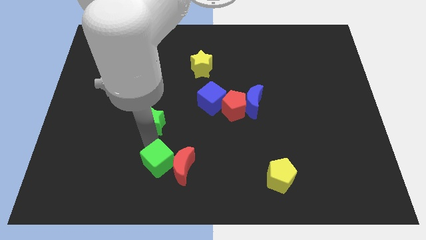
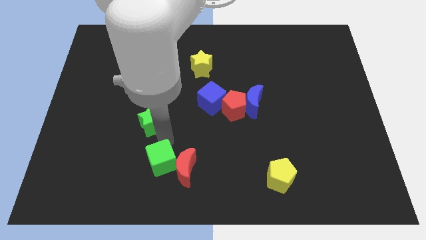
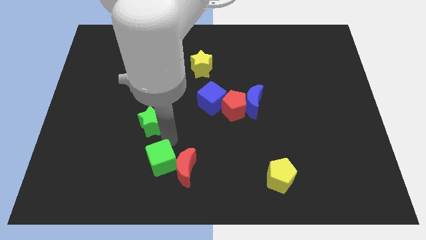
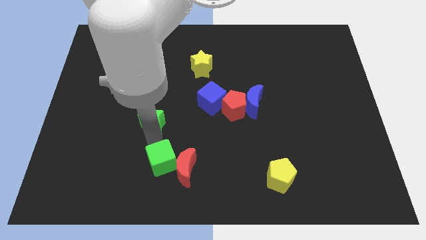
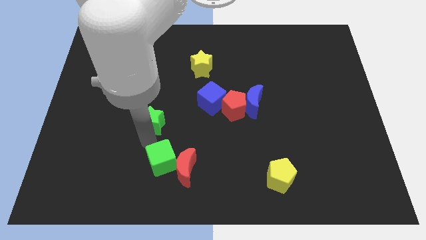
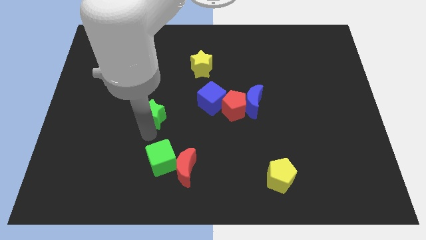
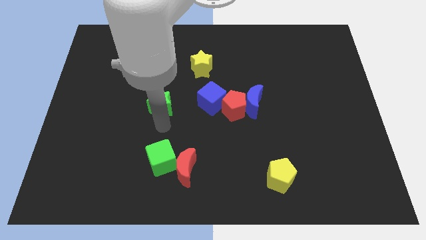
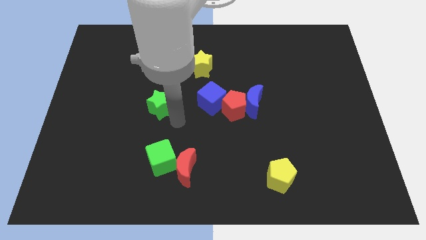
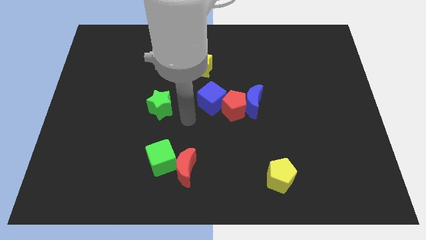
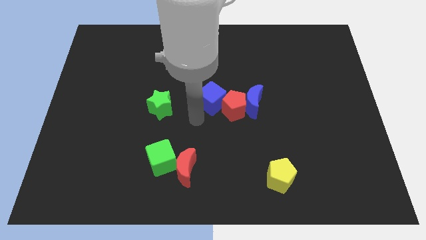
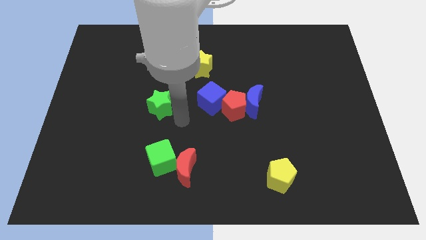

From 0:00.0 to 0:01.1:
move green star up to the left of blue cube

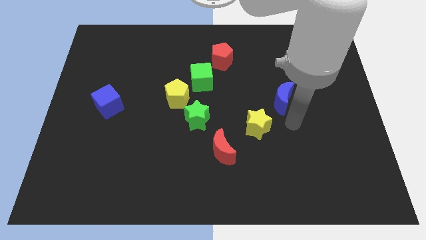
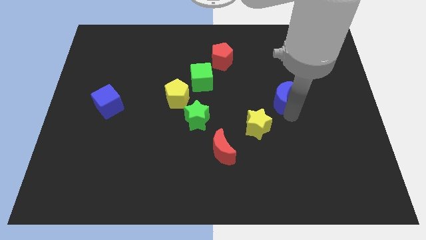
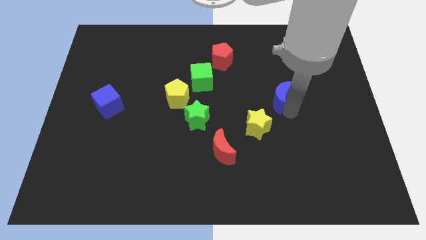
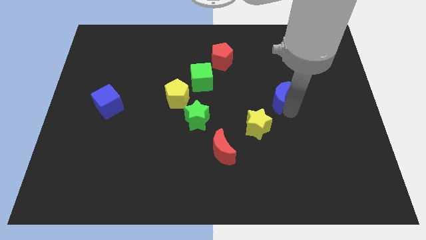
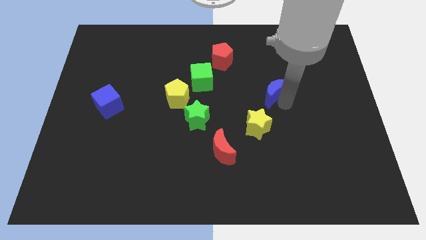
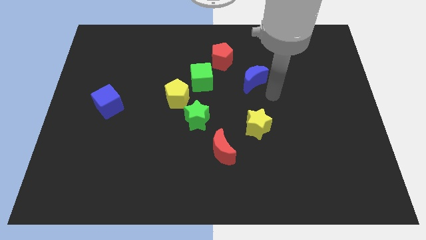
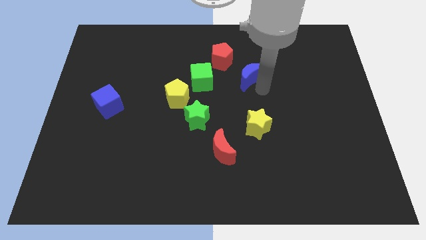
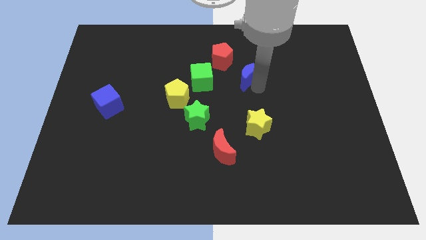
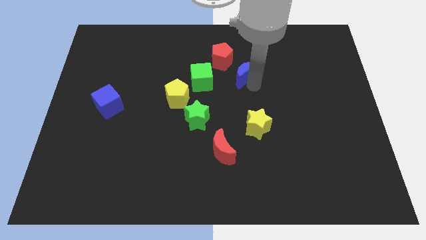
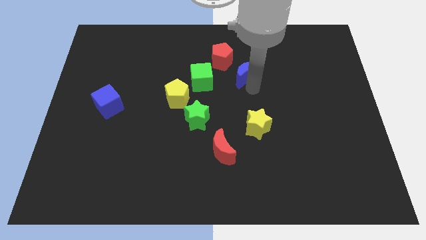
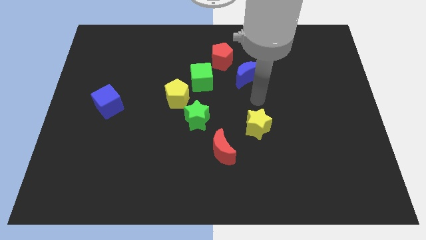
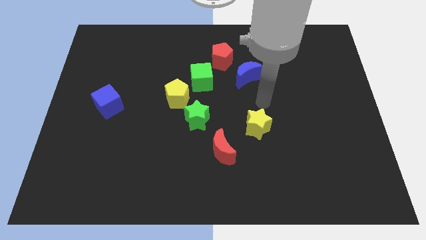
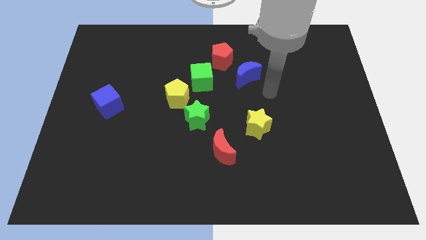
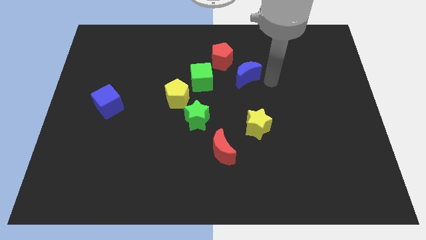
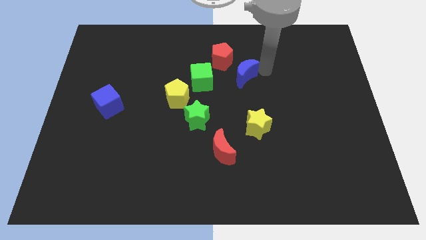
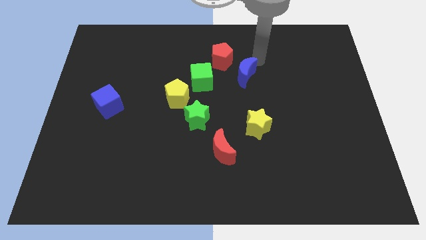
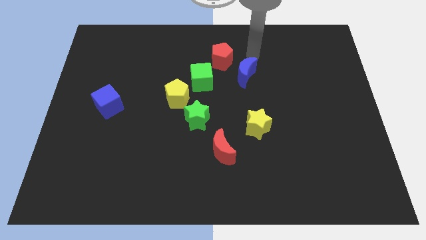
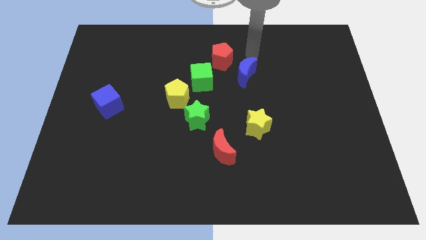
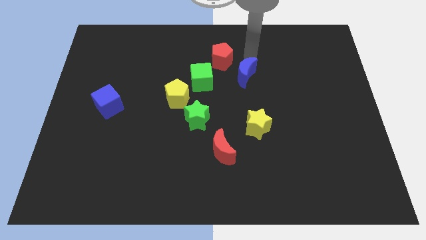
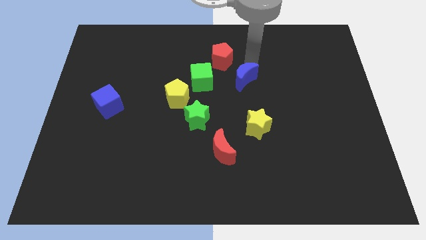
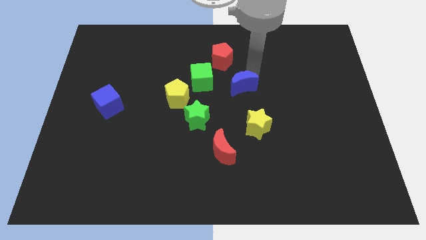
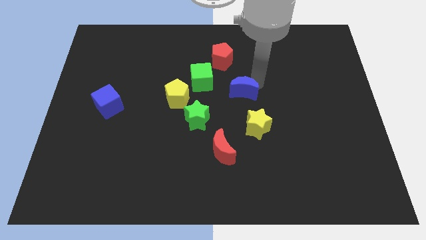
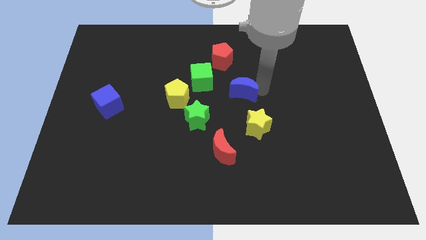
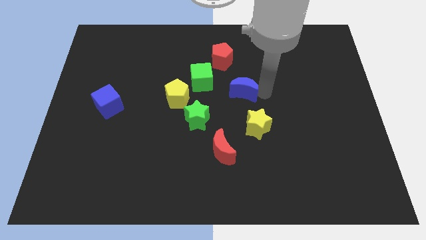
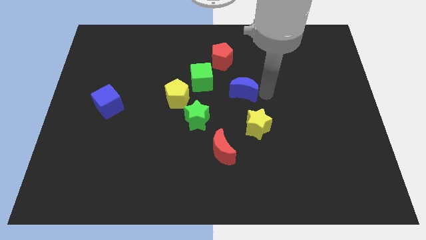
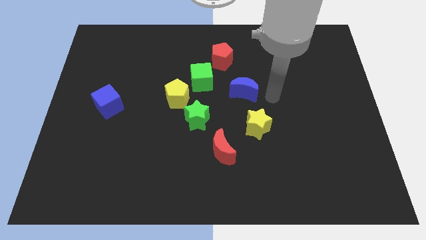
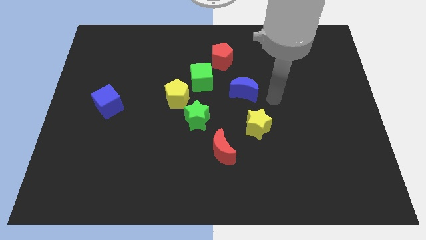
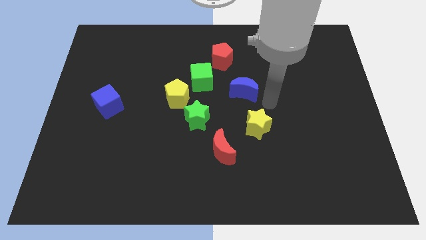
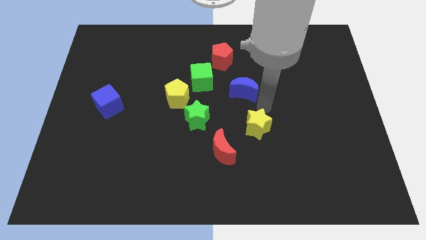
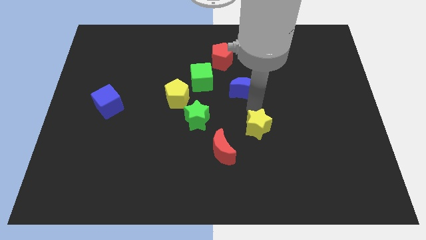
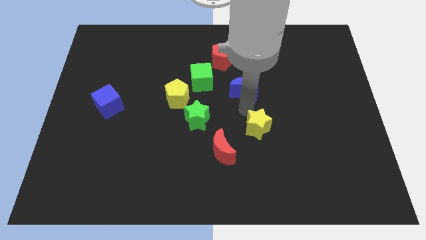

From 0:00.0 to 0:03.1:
slide blue moon horizontal to yellow pentagon

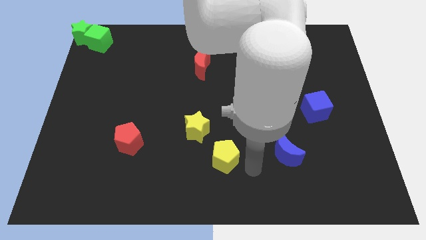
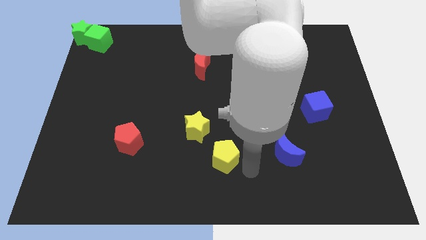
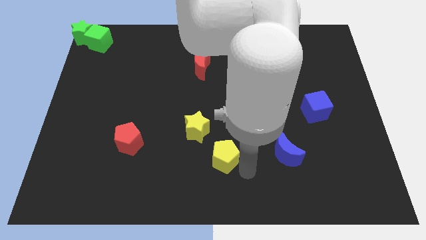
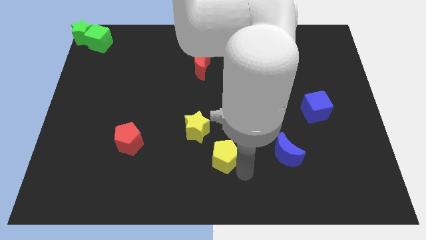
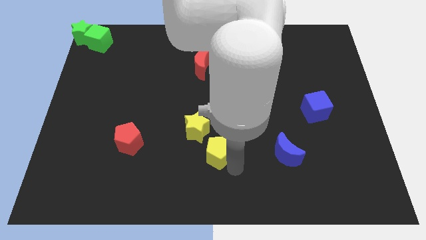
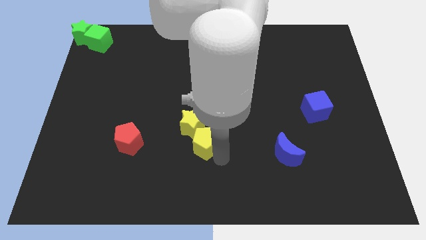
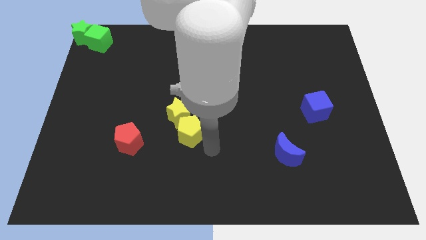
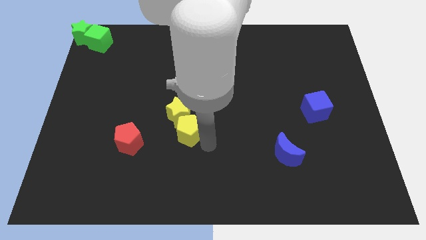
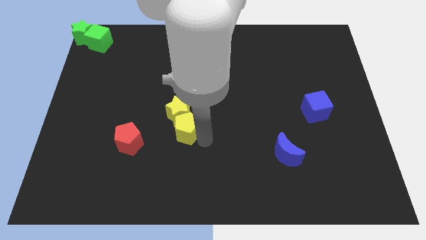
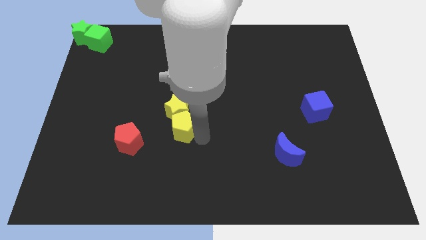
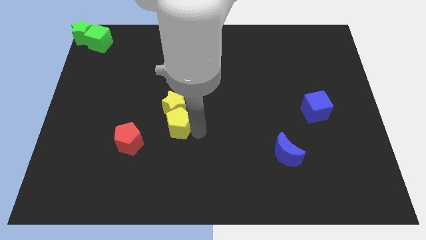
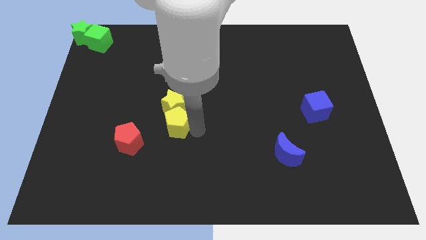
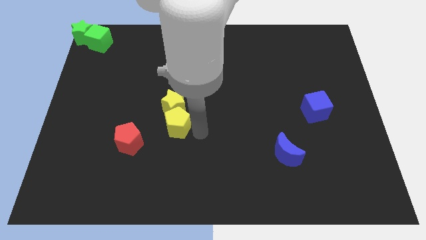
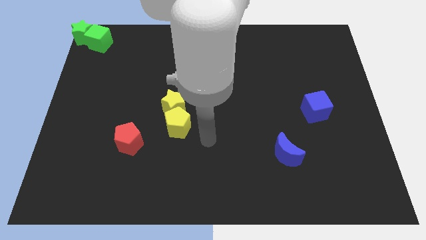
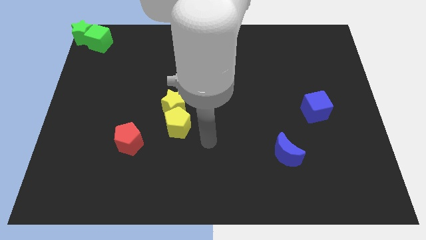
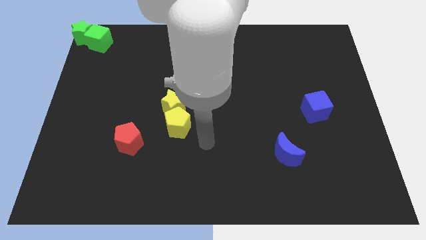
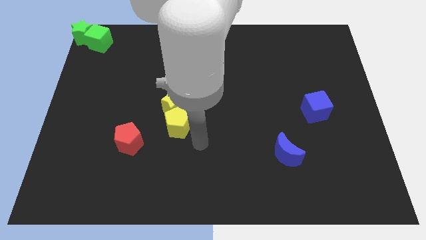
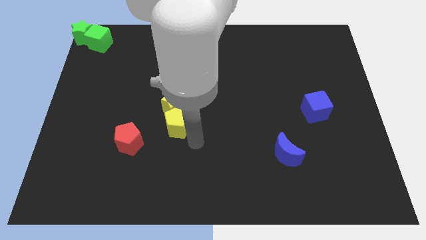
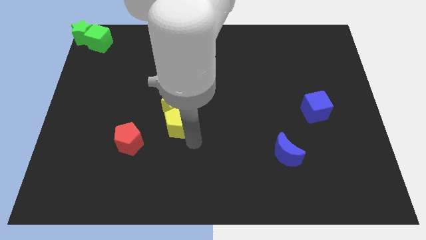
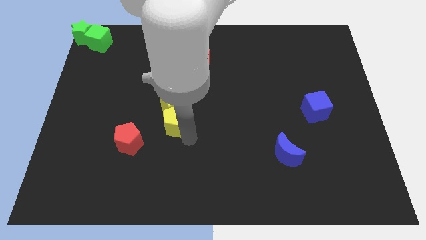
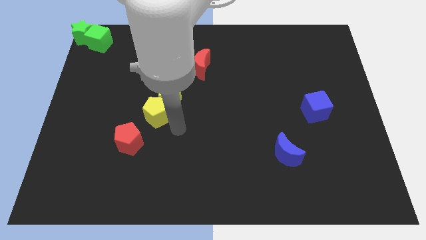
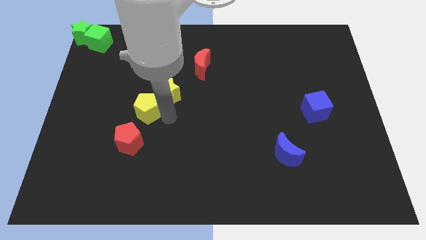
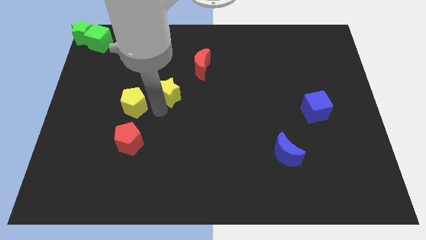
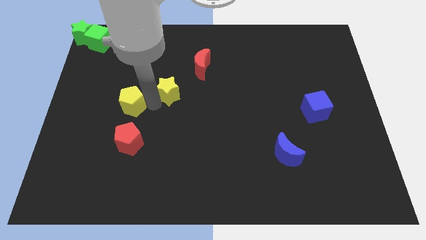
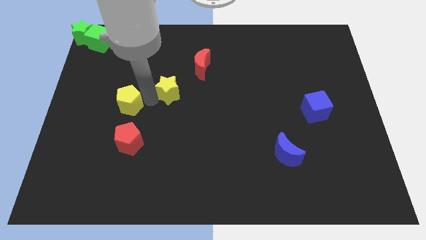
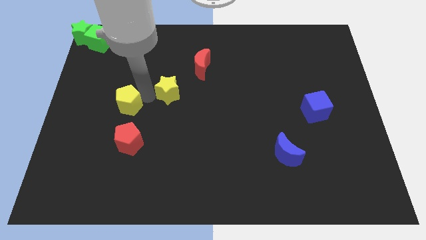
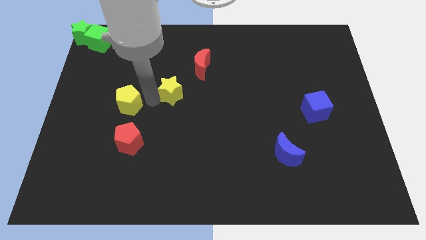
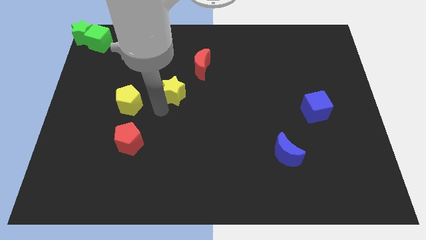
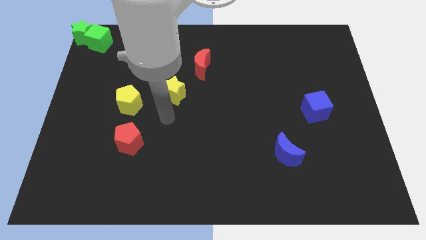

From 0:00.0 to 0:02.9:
push the yellow pentagon to the top side of the red pentagon

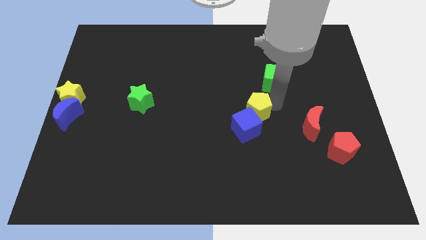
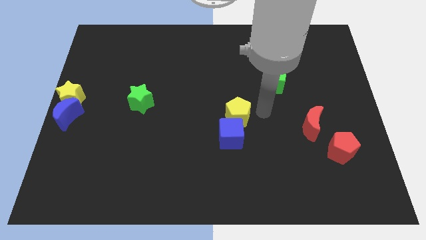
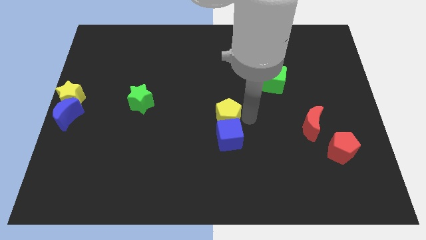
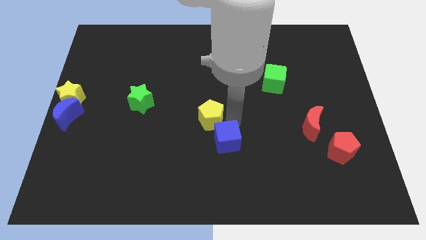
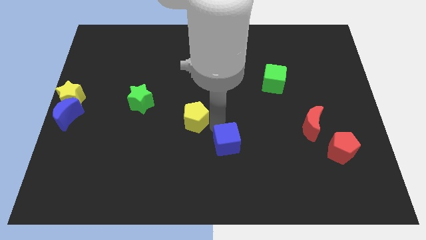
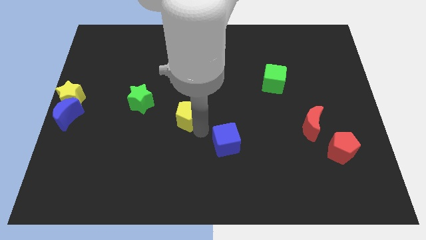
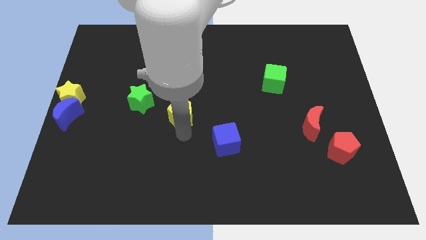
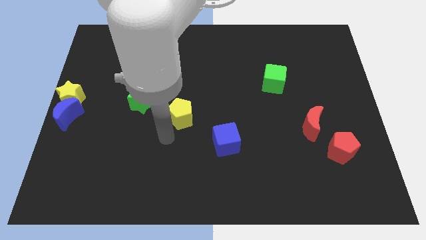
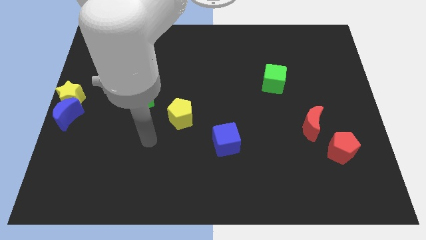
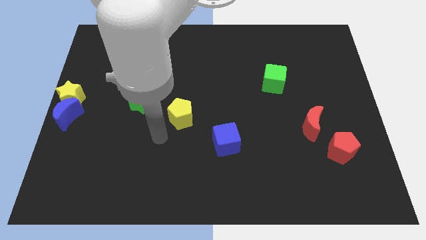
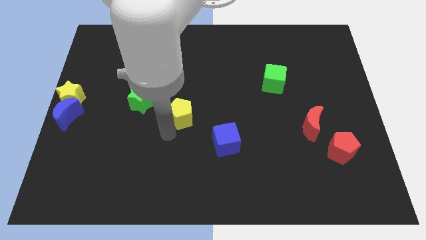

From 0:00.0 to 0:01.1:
separate the yellow pentagon from the blue cube

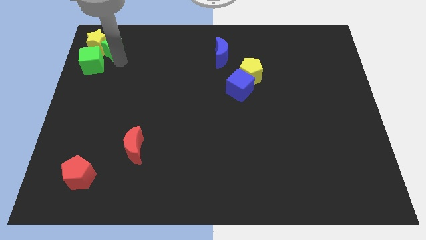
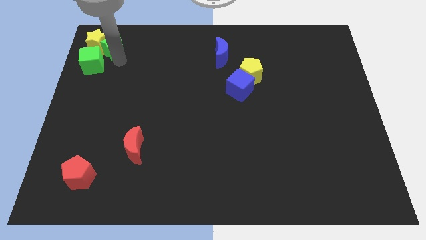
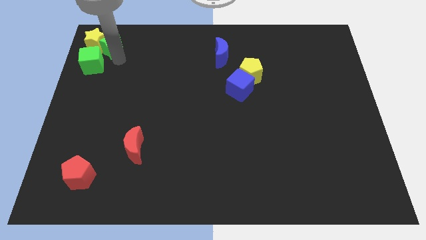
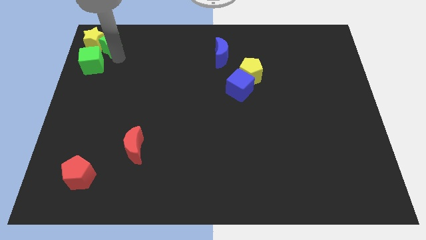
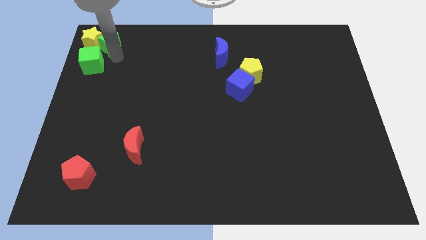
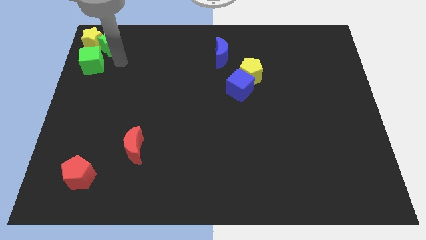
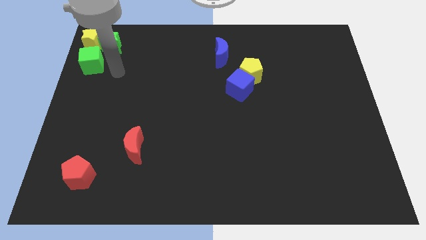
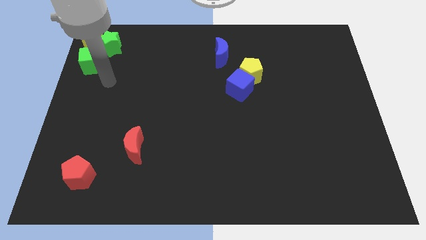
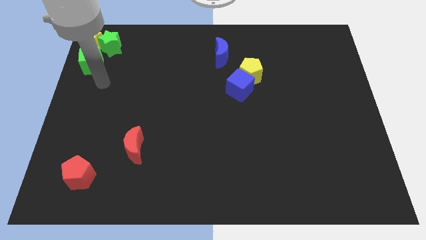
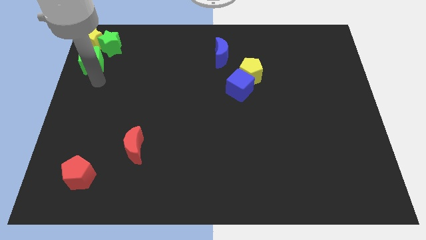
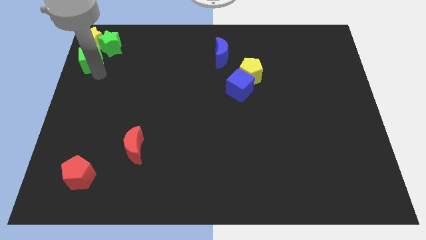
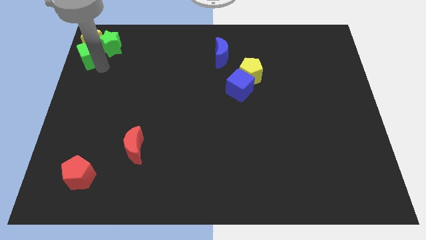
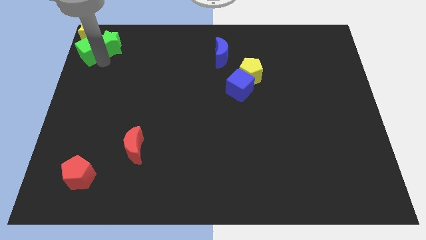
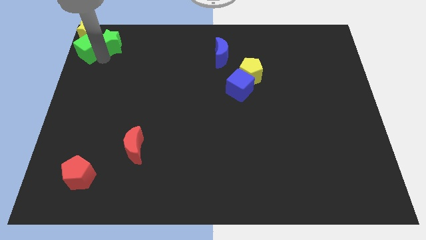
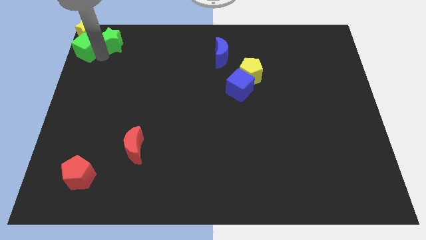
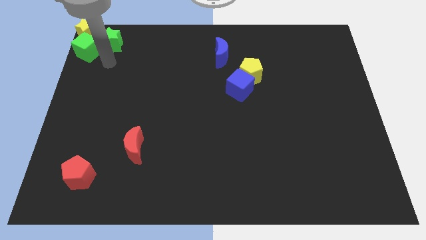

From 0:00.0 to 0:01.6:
move the group of blocks green and yellow star to the top left corner of the board
